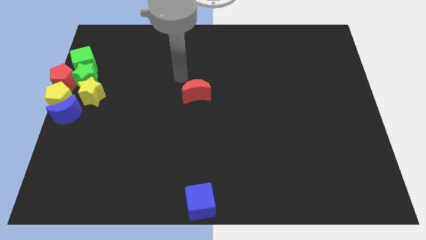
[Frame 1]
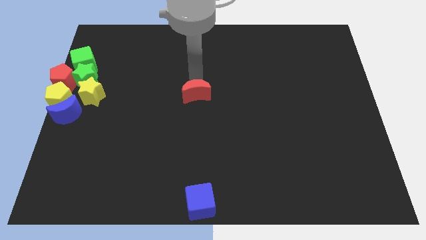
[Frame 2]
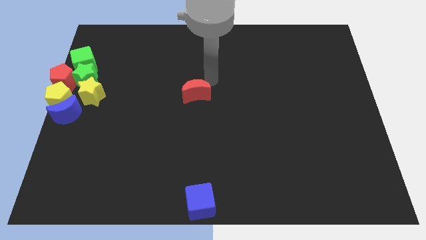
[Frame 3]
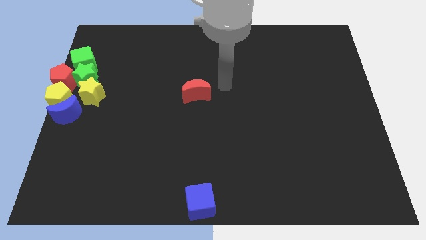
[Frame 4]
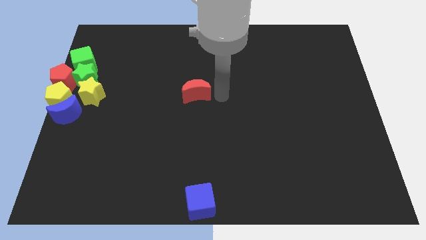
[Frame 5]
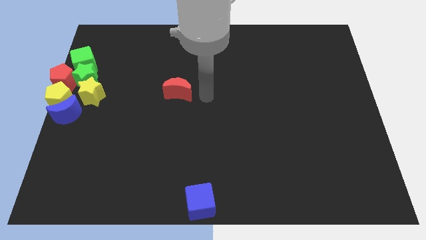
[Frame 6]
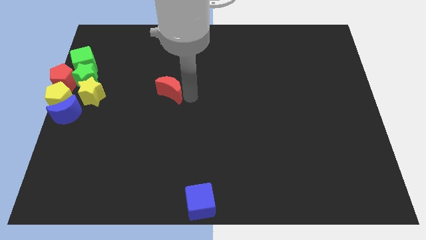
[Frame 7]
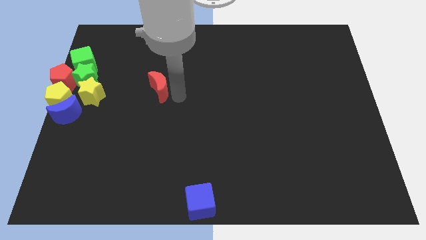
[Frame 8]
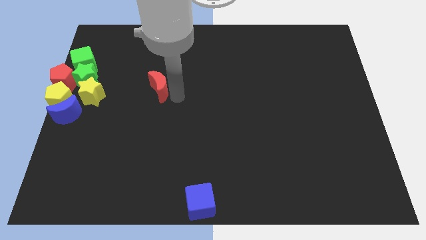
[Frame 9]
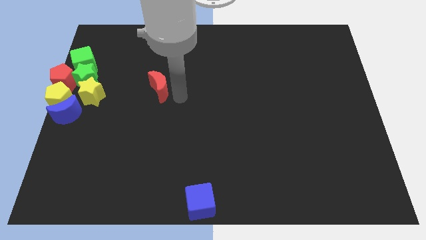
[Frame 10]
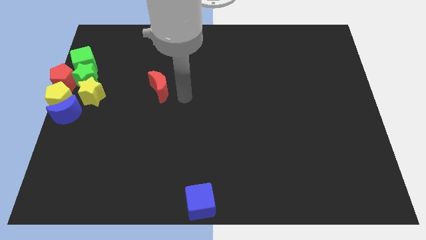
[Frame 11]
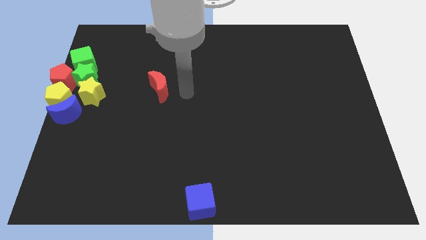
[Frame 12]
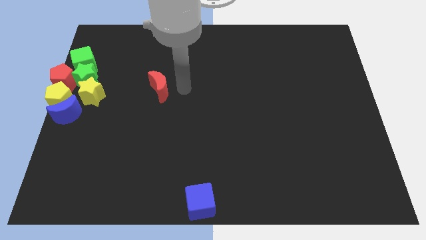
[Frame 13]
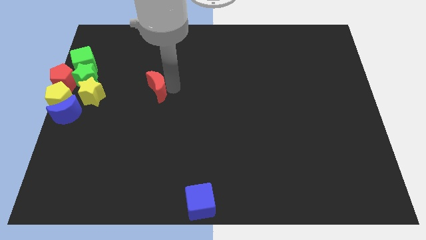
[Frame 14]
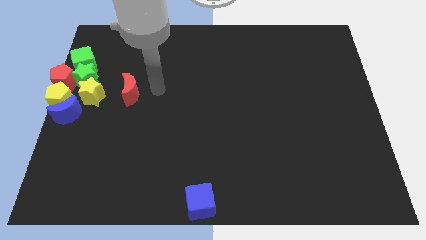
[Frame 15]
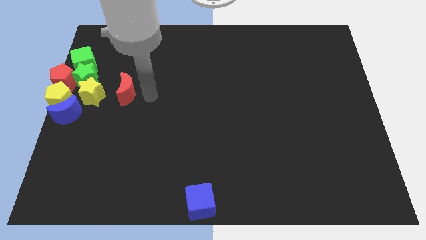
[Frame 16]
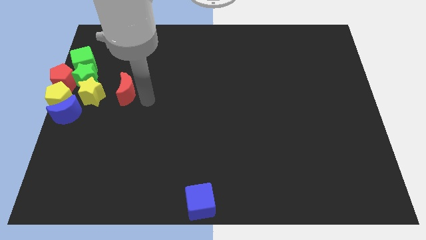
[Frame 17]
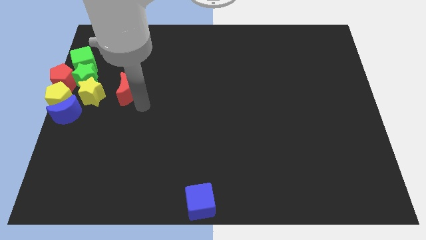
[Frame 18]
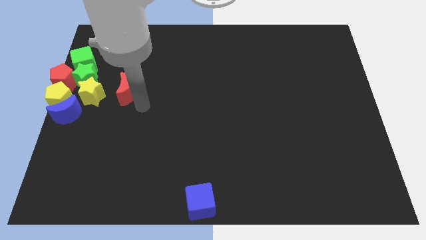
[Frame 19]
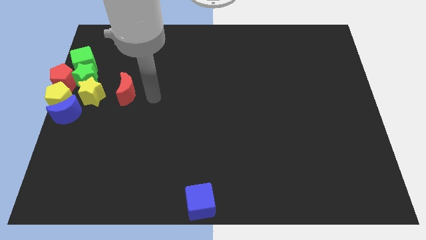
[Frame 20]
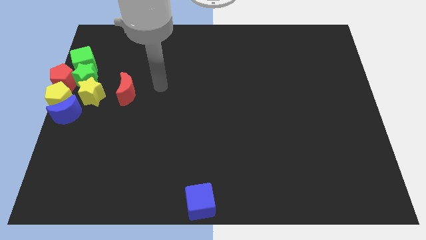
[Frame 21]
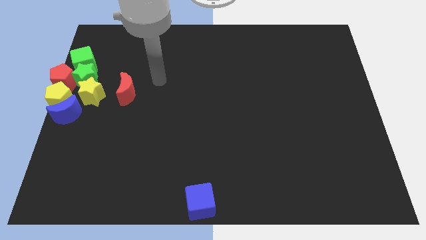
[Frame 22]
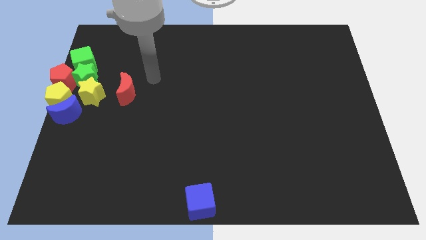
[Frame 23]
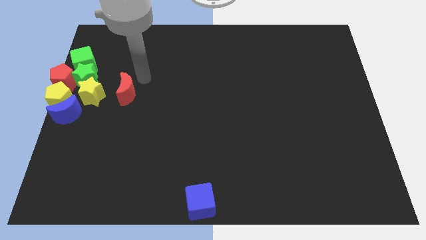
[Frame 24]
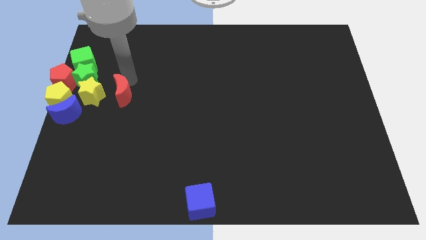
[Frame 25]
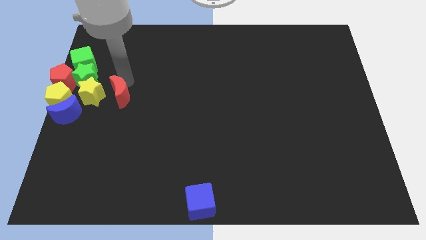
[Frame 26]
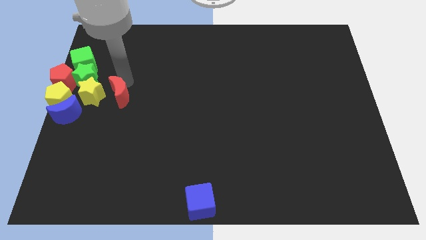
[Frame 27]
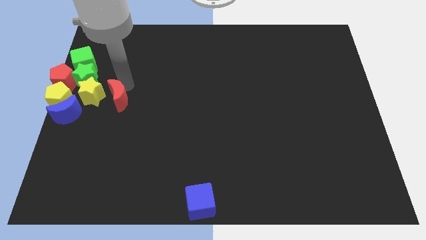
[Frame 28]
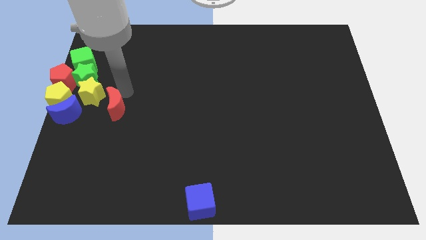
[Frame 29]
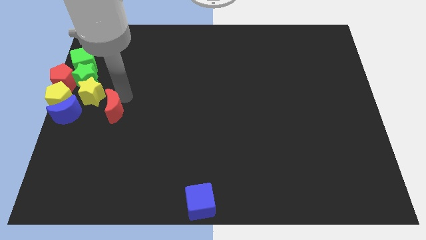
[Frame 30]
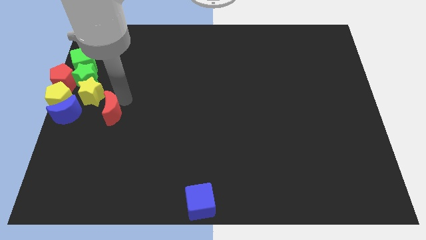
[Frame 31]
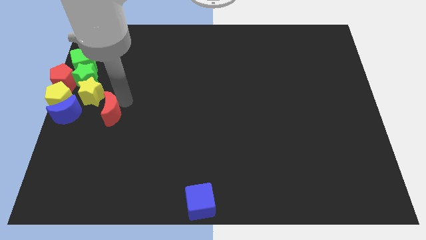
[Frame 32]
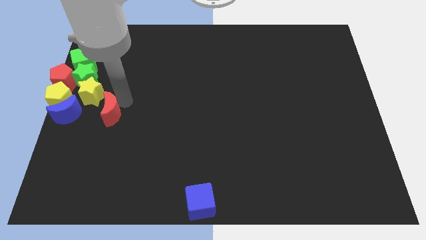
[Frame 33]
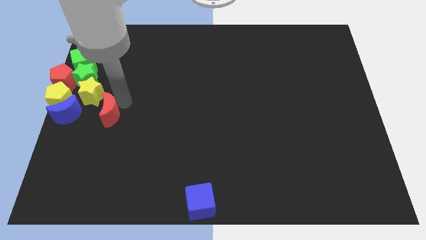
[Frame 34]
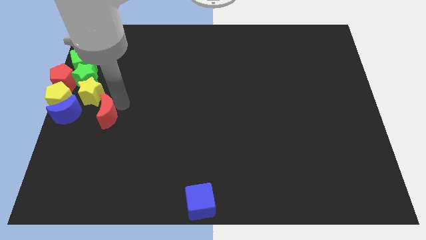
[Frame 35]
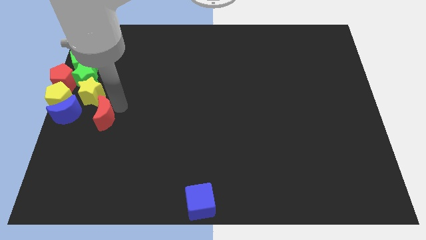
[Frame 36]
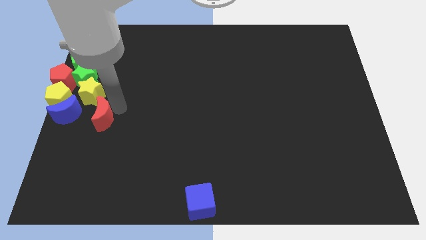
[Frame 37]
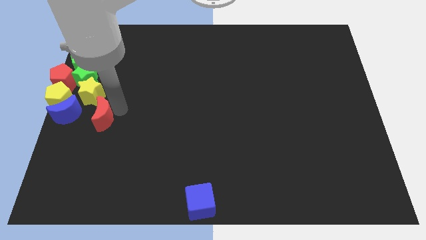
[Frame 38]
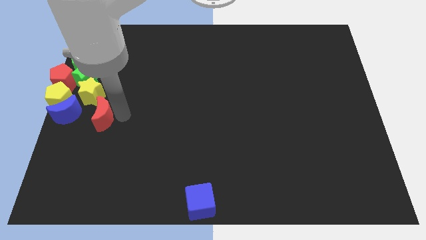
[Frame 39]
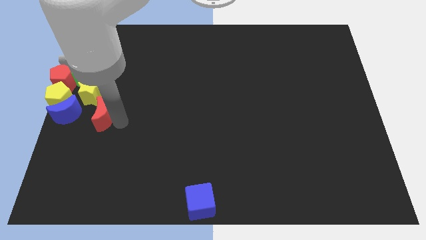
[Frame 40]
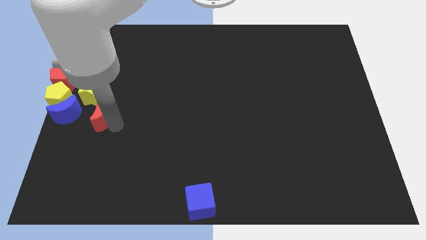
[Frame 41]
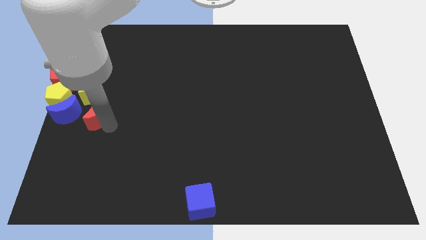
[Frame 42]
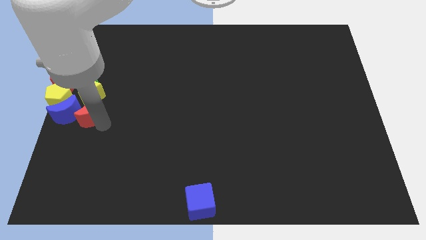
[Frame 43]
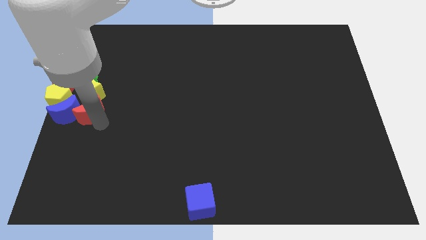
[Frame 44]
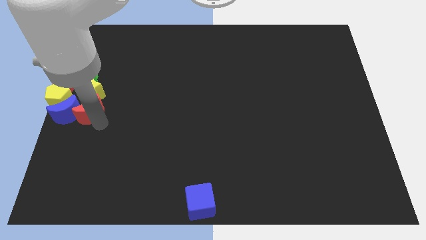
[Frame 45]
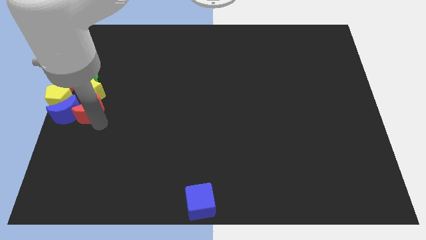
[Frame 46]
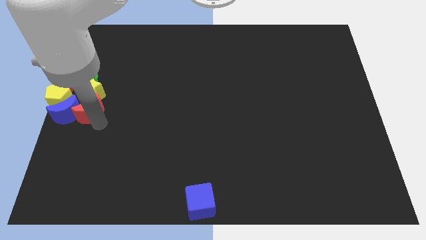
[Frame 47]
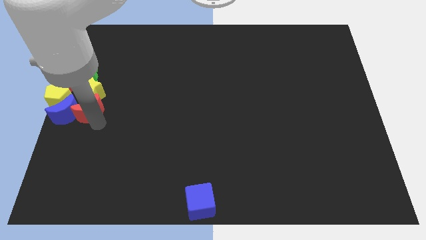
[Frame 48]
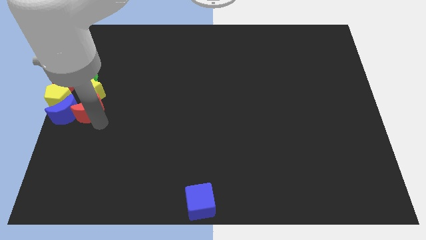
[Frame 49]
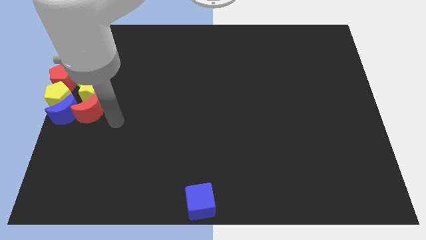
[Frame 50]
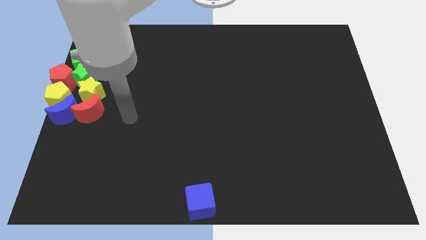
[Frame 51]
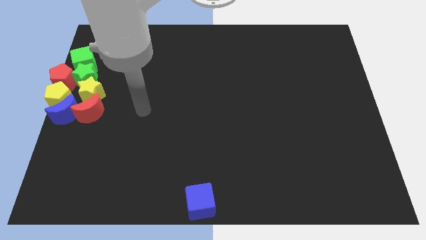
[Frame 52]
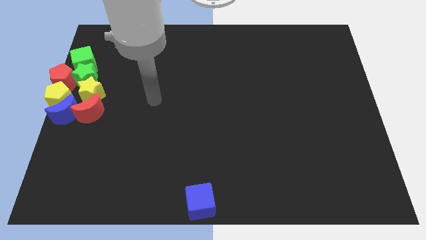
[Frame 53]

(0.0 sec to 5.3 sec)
push the red crescent to the bottom of the yellow star

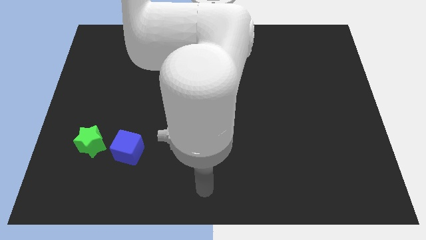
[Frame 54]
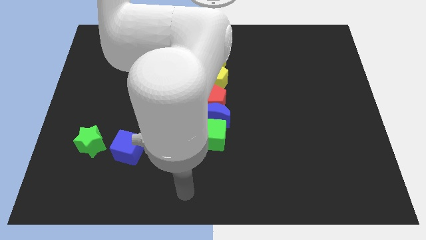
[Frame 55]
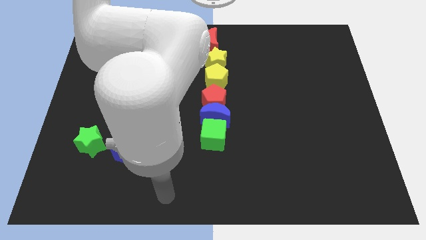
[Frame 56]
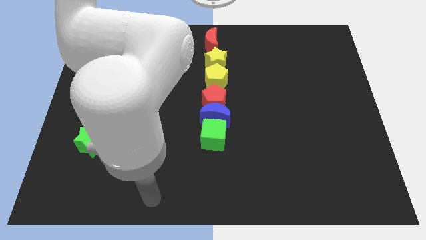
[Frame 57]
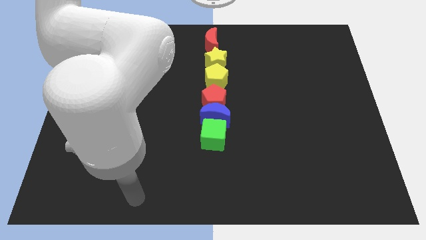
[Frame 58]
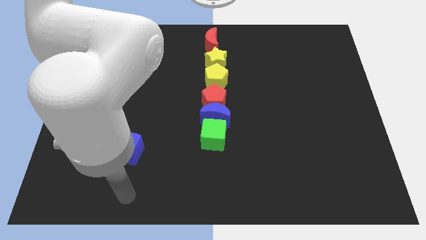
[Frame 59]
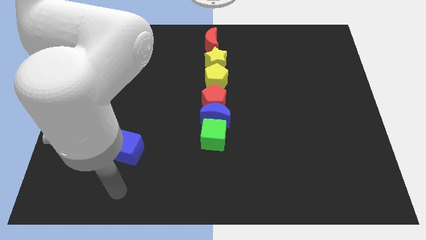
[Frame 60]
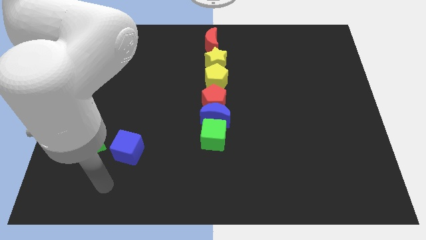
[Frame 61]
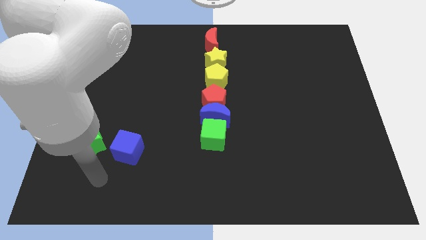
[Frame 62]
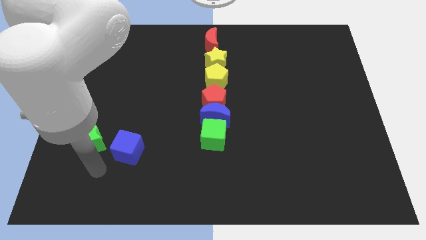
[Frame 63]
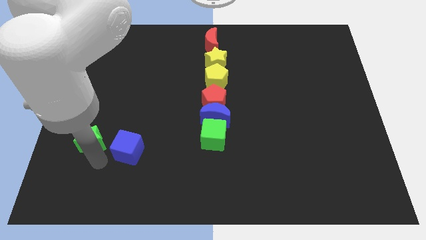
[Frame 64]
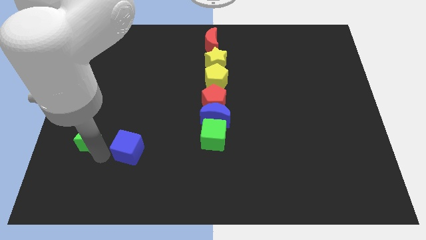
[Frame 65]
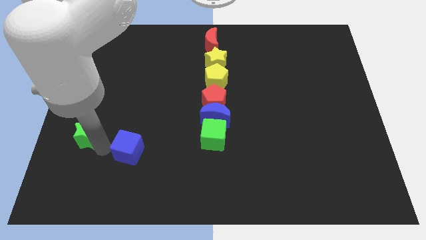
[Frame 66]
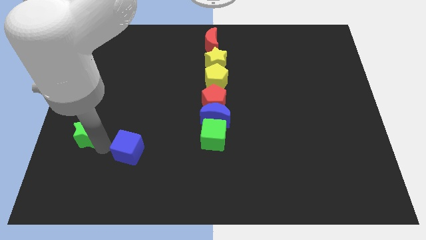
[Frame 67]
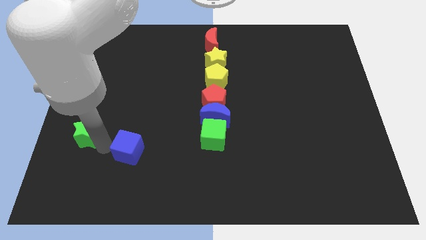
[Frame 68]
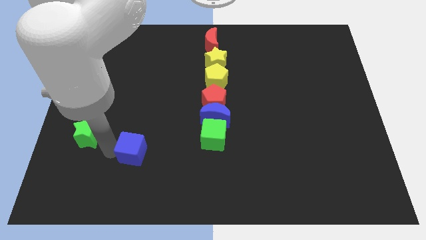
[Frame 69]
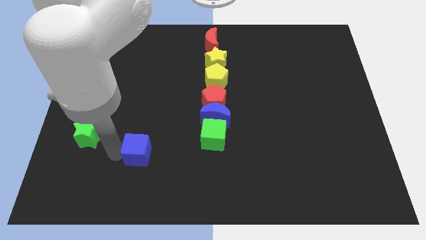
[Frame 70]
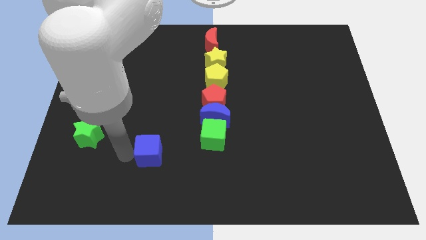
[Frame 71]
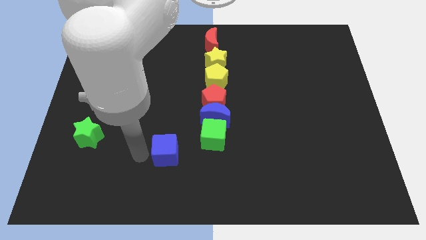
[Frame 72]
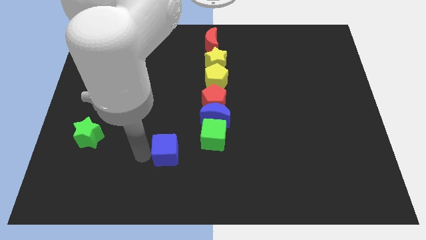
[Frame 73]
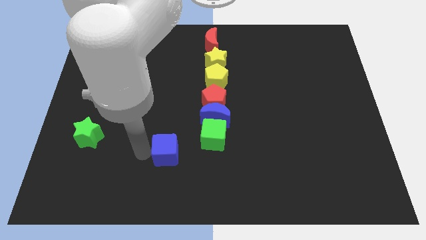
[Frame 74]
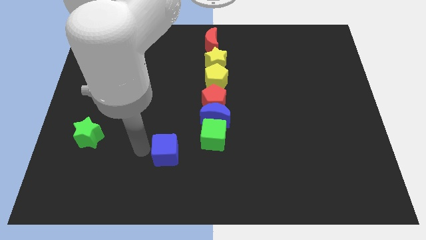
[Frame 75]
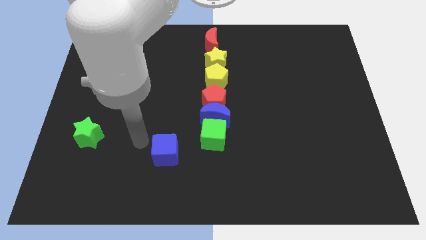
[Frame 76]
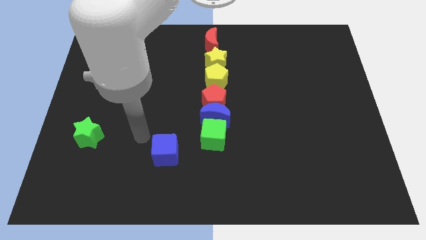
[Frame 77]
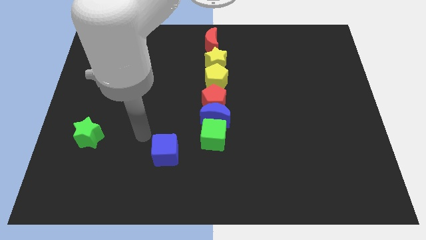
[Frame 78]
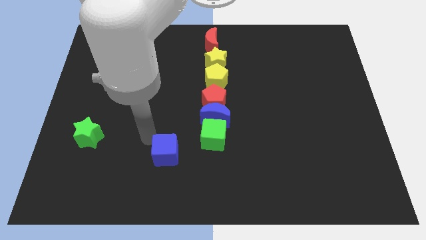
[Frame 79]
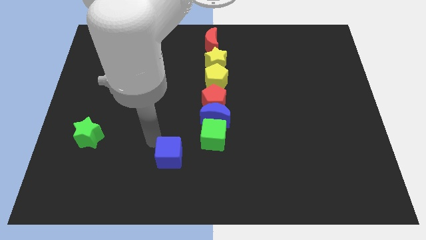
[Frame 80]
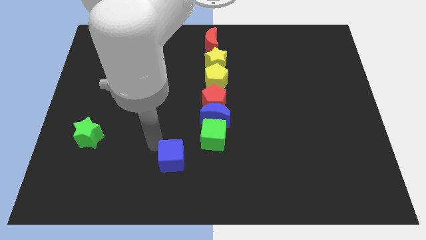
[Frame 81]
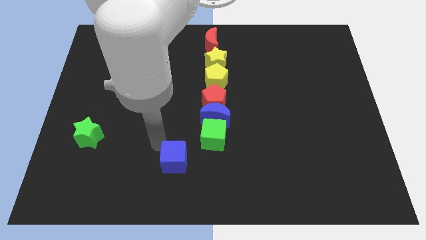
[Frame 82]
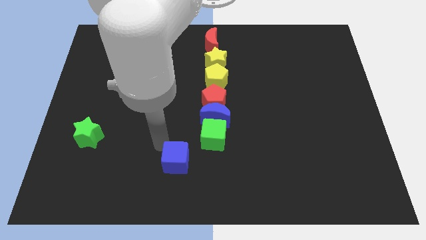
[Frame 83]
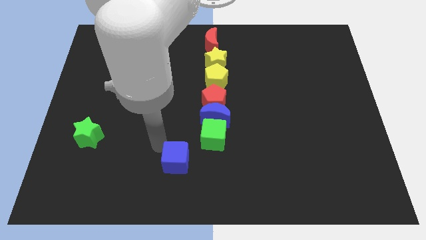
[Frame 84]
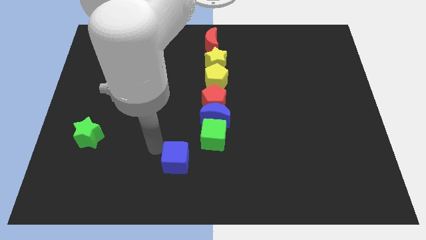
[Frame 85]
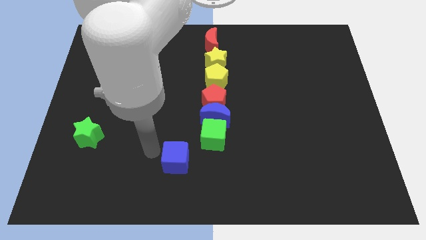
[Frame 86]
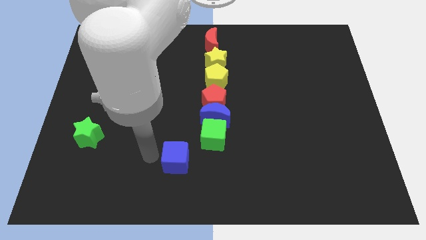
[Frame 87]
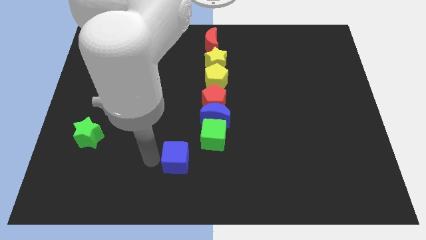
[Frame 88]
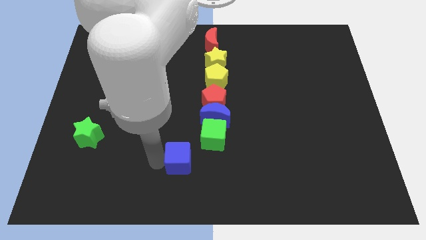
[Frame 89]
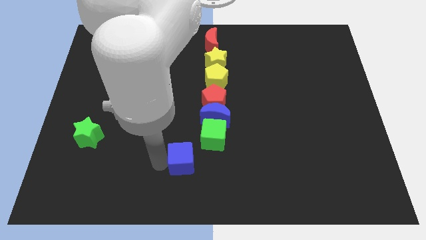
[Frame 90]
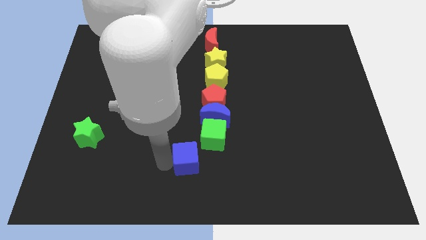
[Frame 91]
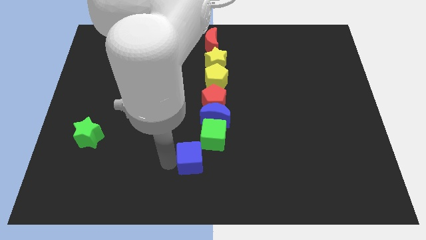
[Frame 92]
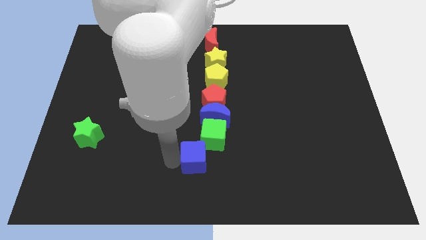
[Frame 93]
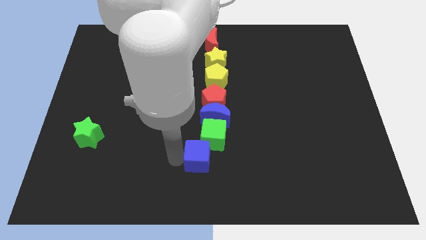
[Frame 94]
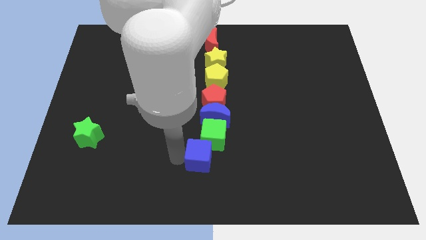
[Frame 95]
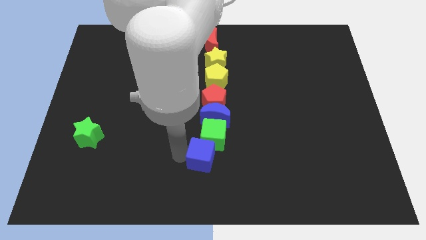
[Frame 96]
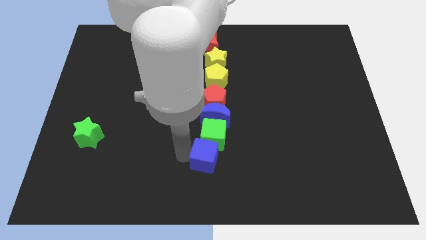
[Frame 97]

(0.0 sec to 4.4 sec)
push the blue cube away from the right side of green star
